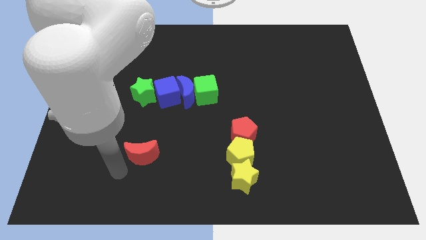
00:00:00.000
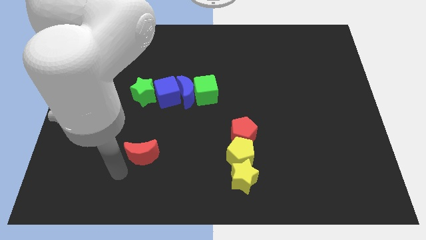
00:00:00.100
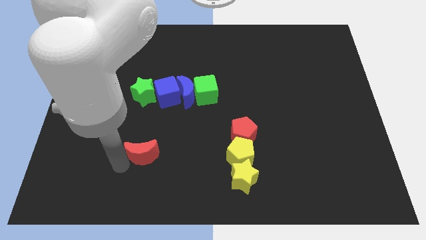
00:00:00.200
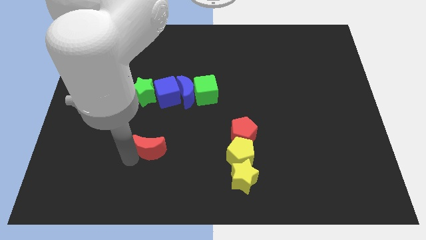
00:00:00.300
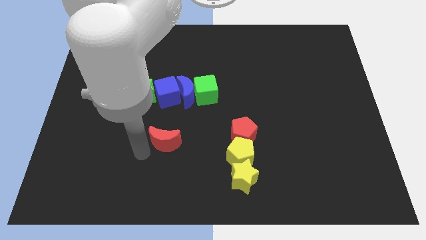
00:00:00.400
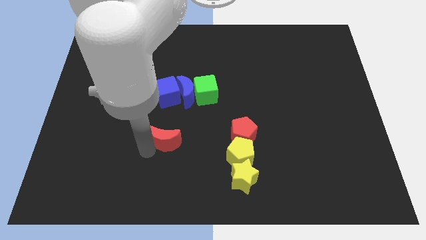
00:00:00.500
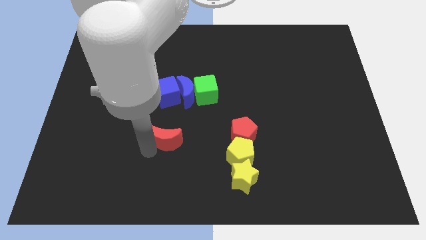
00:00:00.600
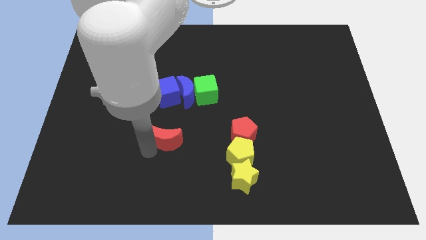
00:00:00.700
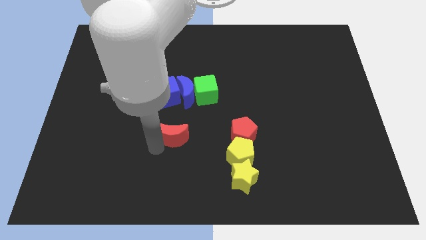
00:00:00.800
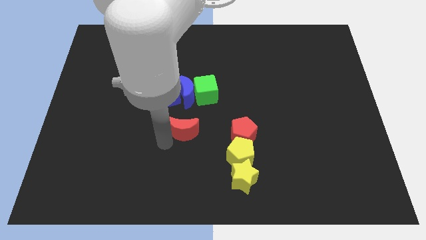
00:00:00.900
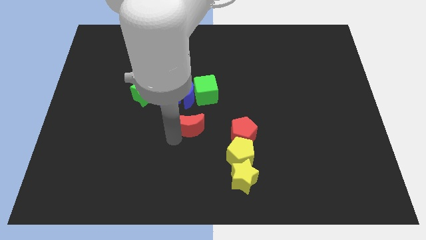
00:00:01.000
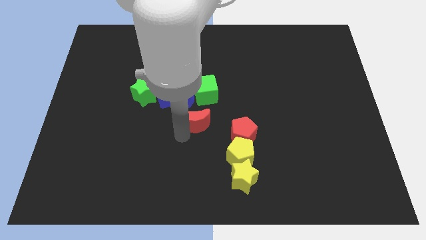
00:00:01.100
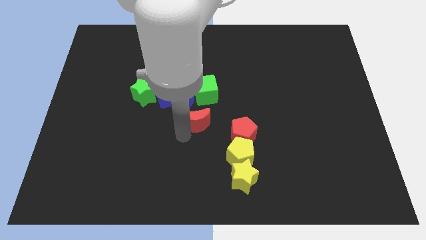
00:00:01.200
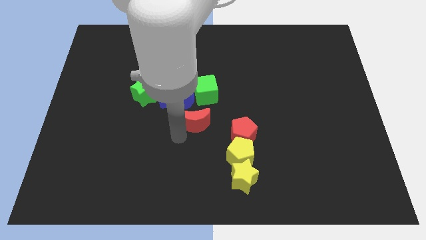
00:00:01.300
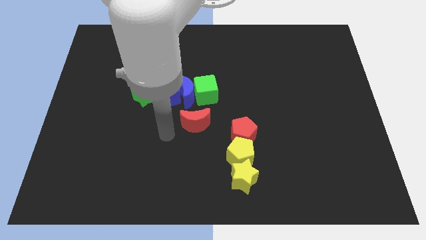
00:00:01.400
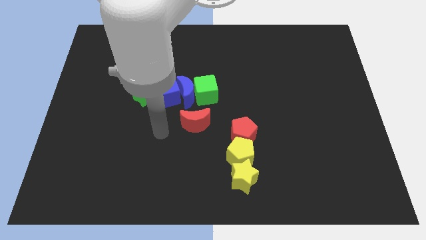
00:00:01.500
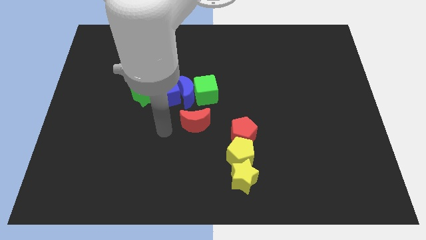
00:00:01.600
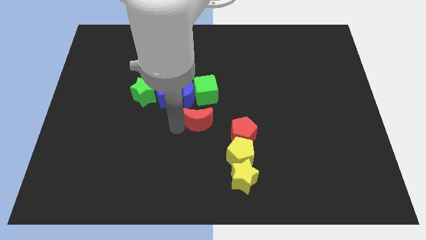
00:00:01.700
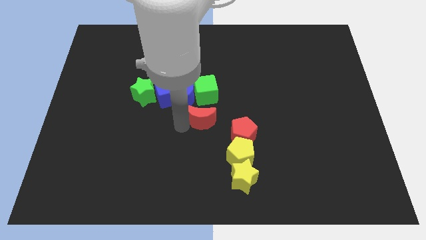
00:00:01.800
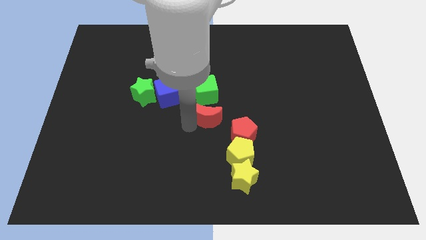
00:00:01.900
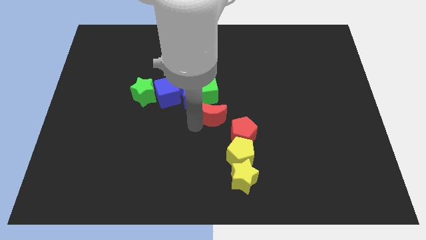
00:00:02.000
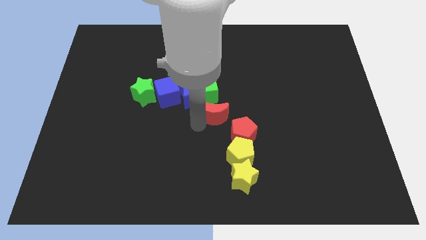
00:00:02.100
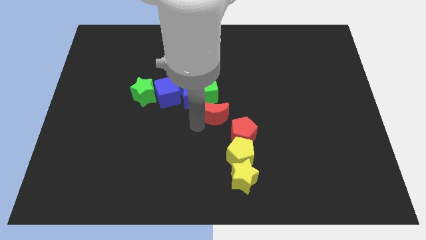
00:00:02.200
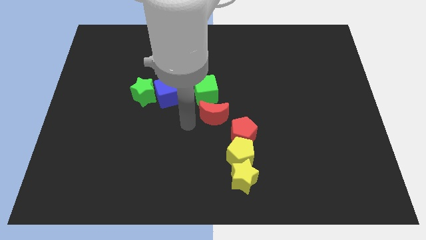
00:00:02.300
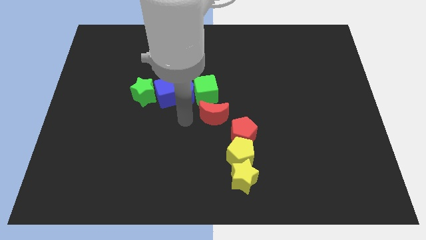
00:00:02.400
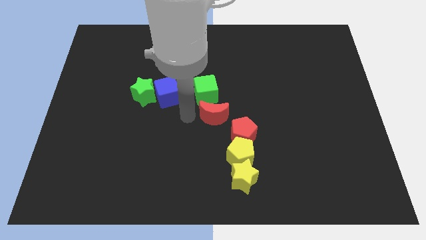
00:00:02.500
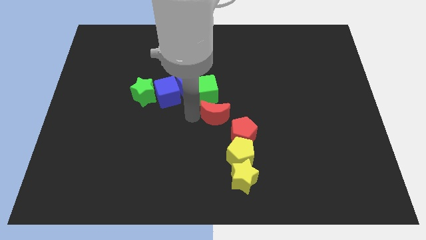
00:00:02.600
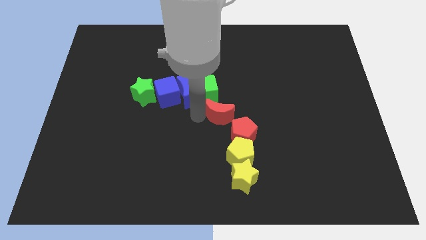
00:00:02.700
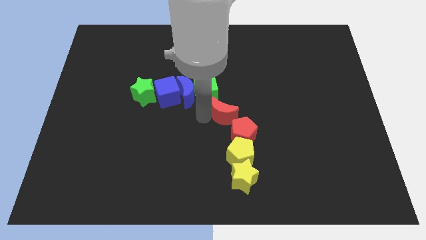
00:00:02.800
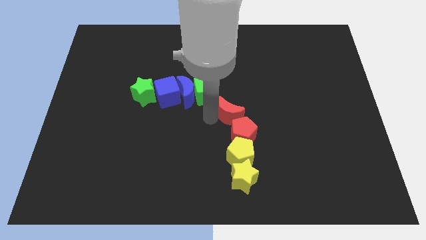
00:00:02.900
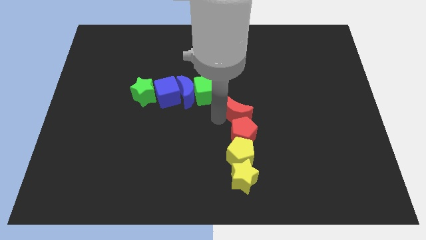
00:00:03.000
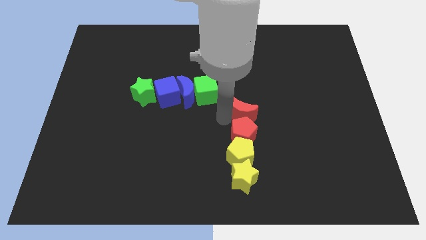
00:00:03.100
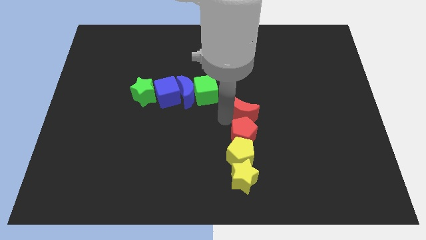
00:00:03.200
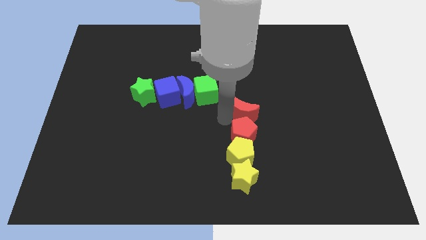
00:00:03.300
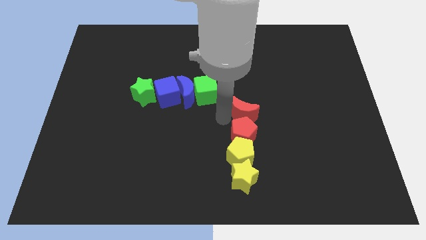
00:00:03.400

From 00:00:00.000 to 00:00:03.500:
push the red moon above the red pentagon

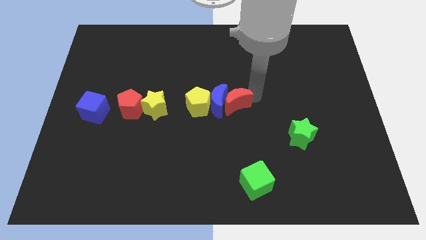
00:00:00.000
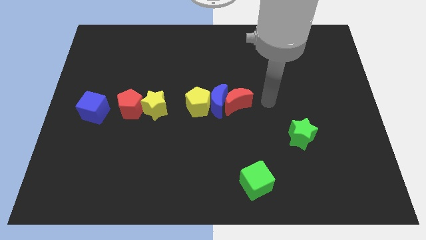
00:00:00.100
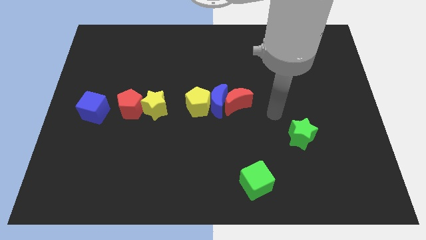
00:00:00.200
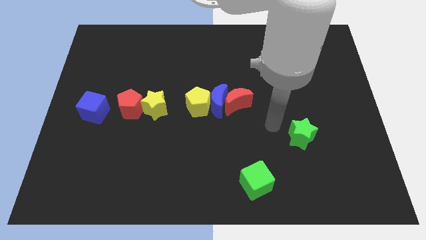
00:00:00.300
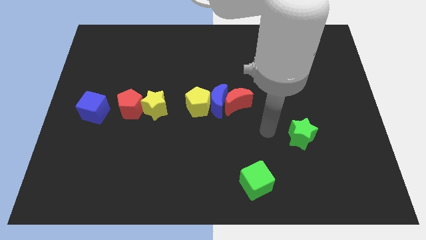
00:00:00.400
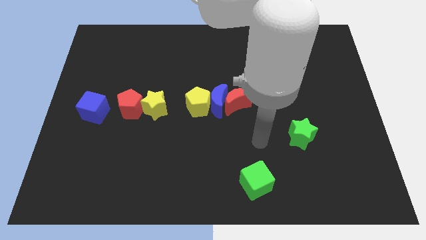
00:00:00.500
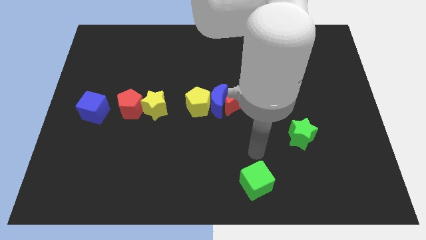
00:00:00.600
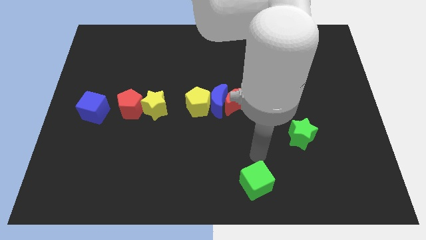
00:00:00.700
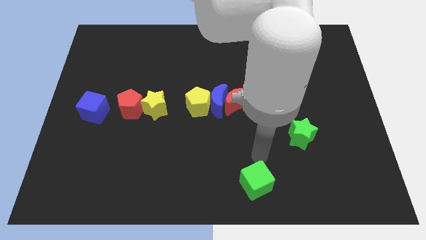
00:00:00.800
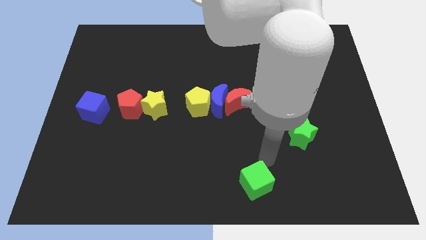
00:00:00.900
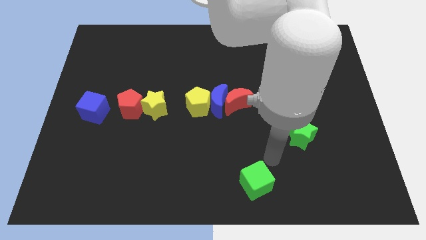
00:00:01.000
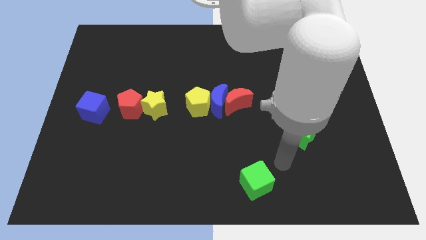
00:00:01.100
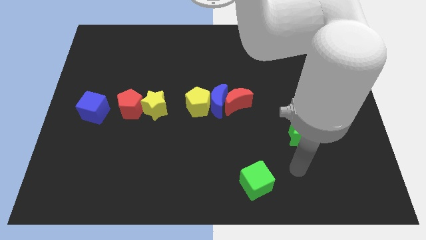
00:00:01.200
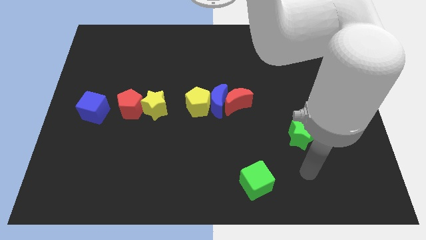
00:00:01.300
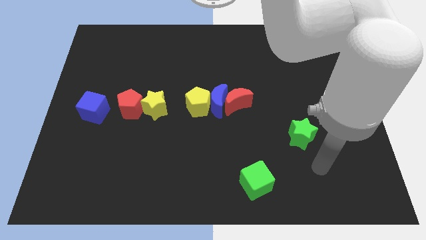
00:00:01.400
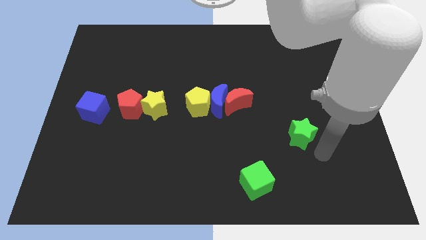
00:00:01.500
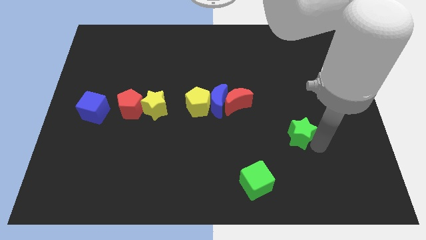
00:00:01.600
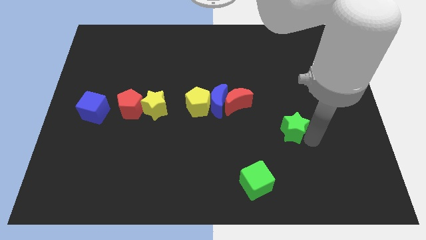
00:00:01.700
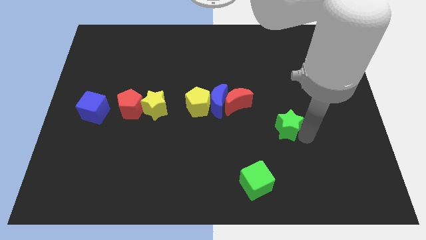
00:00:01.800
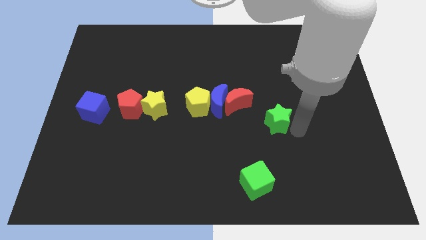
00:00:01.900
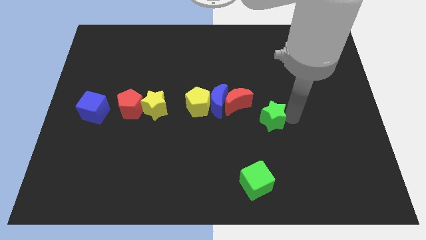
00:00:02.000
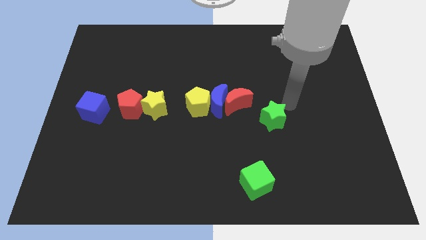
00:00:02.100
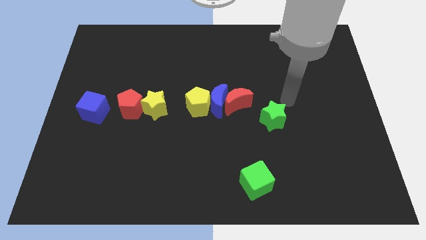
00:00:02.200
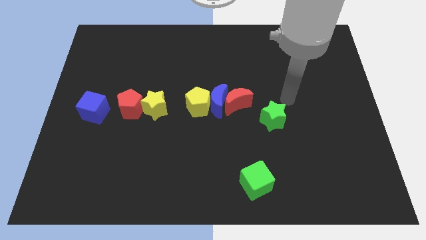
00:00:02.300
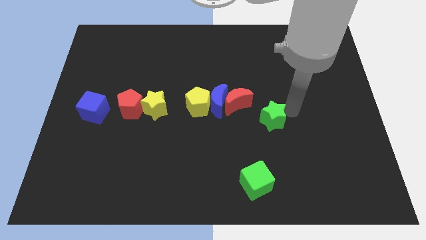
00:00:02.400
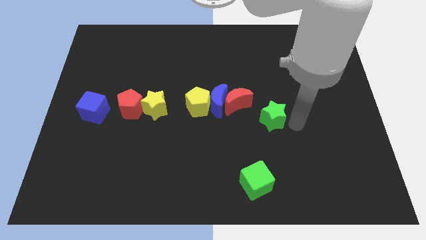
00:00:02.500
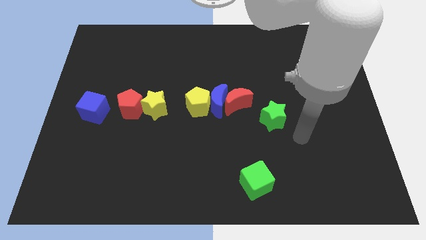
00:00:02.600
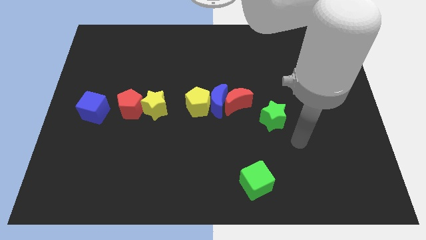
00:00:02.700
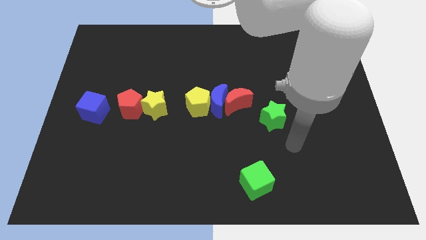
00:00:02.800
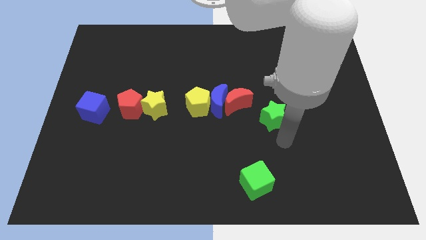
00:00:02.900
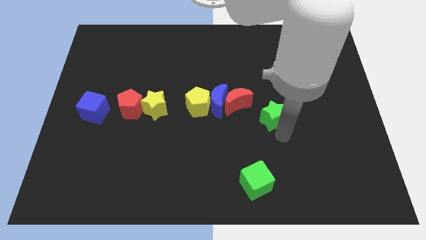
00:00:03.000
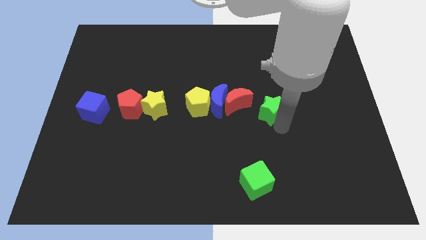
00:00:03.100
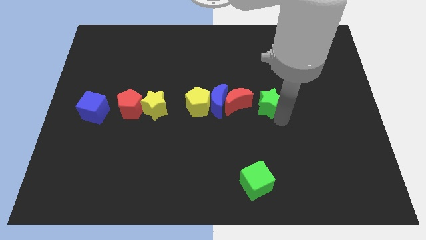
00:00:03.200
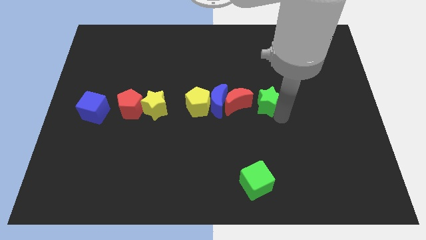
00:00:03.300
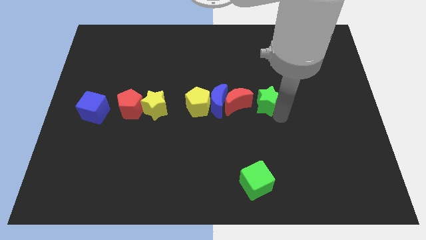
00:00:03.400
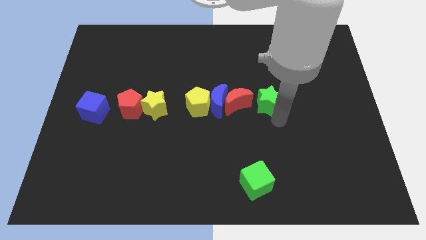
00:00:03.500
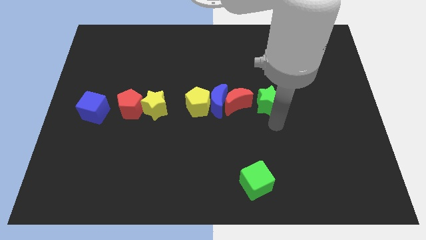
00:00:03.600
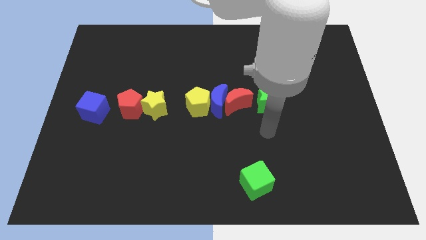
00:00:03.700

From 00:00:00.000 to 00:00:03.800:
put the green star parallel right to the red moon

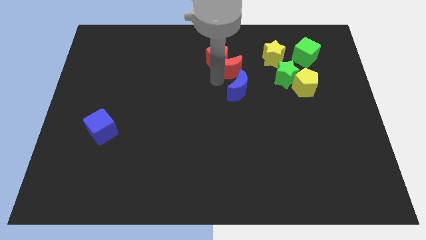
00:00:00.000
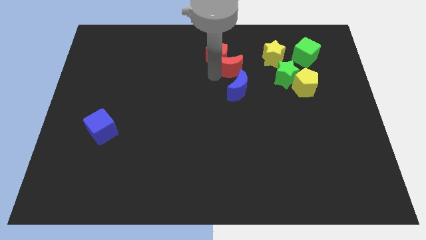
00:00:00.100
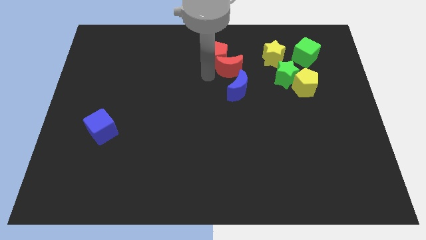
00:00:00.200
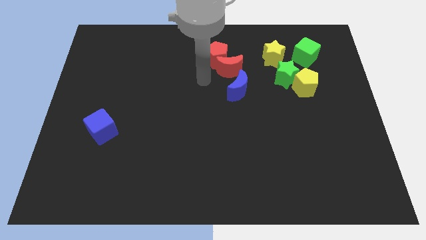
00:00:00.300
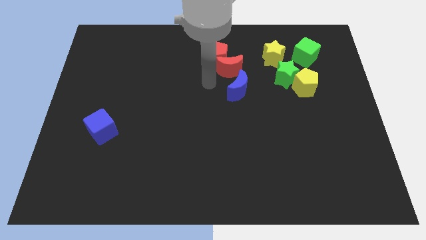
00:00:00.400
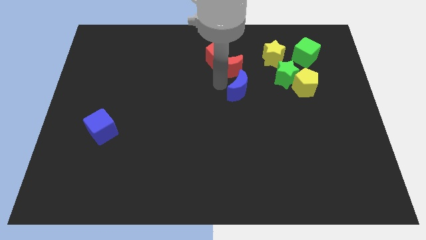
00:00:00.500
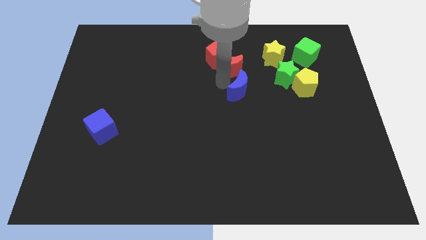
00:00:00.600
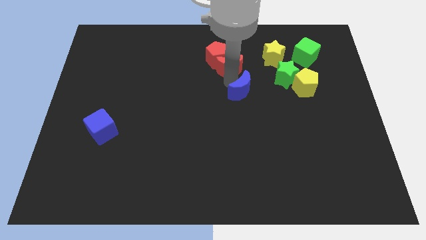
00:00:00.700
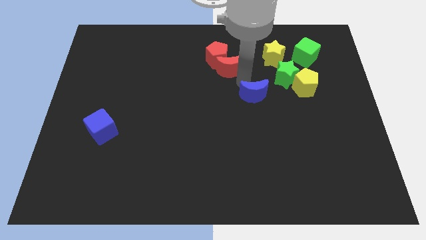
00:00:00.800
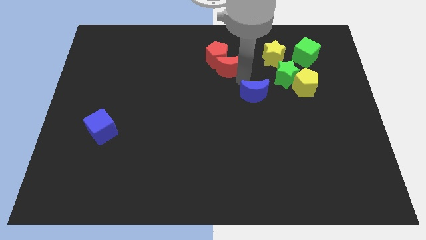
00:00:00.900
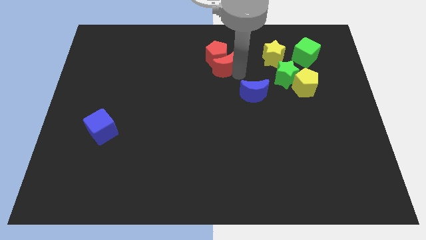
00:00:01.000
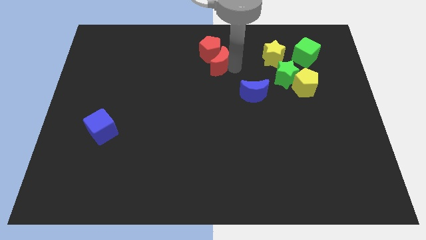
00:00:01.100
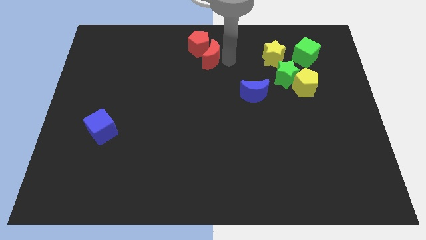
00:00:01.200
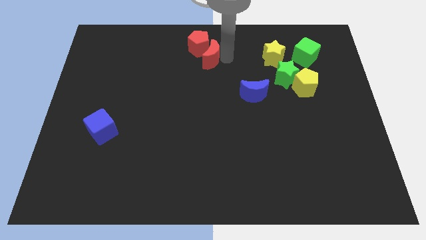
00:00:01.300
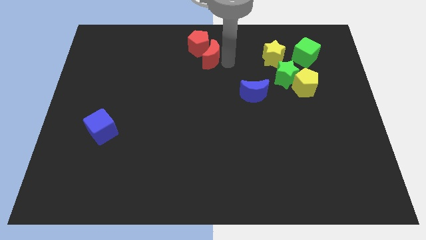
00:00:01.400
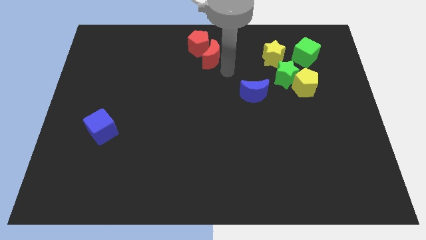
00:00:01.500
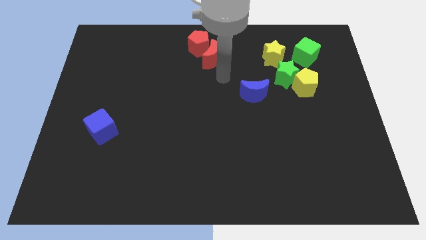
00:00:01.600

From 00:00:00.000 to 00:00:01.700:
separate blue crescent from red crescent
